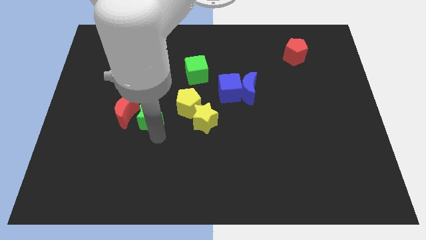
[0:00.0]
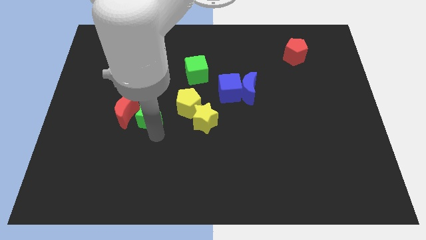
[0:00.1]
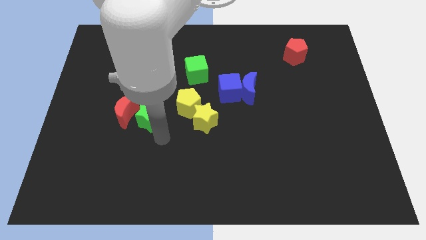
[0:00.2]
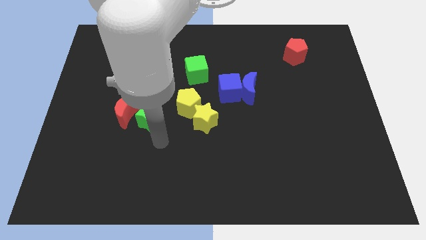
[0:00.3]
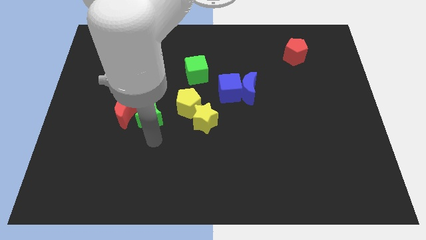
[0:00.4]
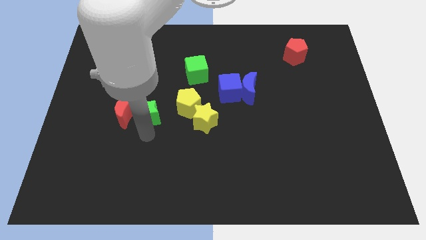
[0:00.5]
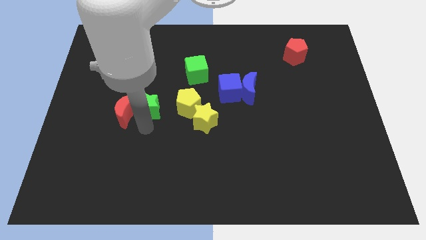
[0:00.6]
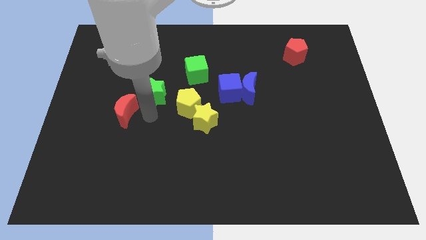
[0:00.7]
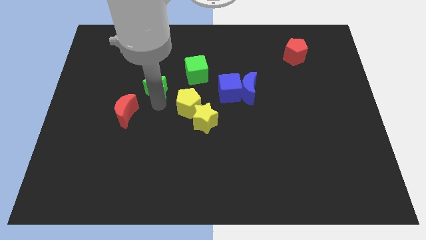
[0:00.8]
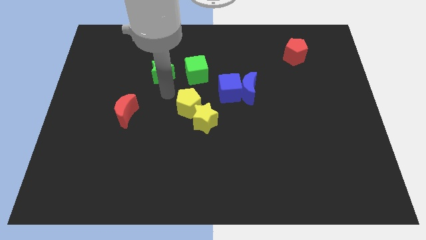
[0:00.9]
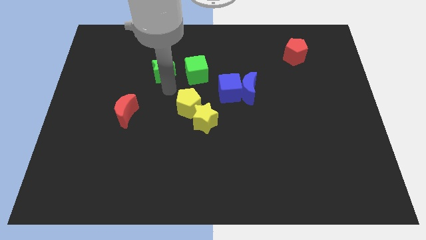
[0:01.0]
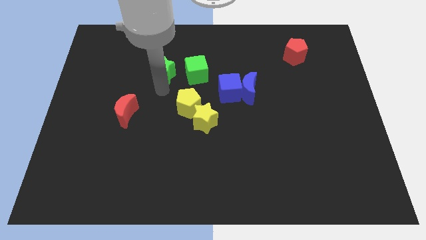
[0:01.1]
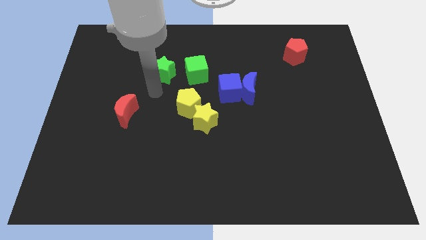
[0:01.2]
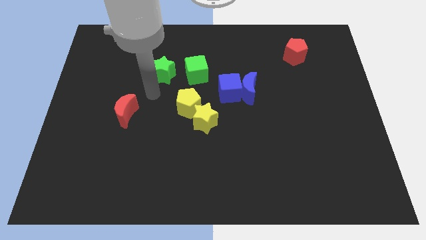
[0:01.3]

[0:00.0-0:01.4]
push the green star left to the green cube

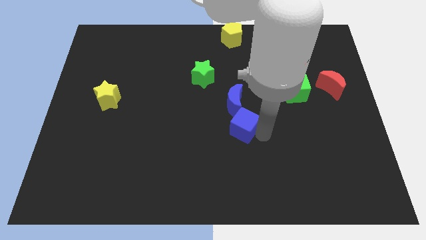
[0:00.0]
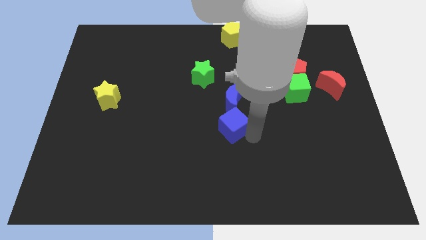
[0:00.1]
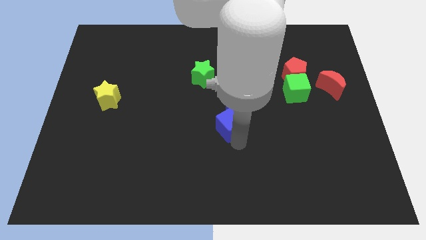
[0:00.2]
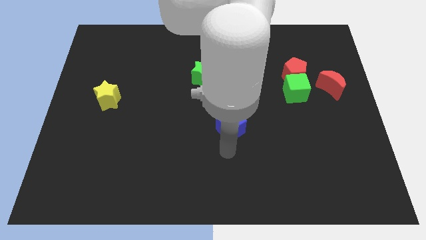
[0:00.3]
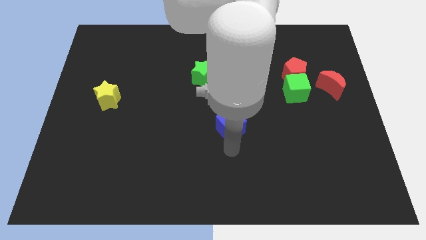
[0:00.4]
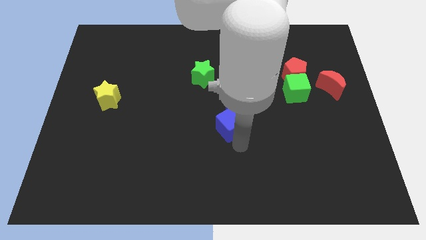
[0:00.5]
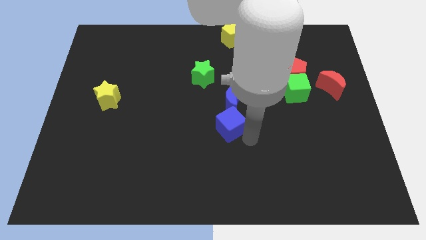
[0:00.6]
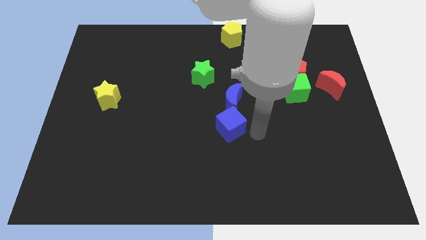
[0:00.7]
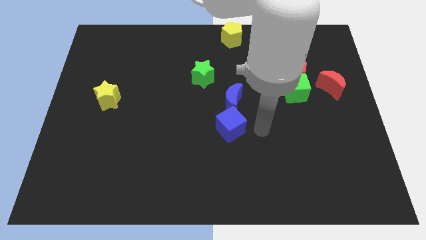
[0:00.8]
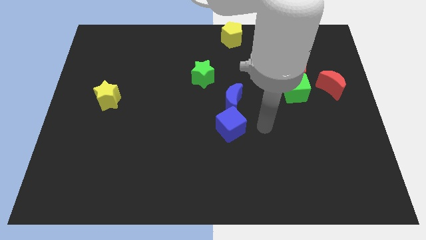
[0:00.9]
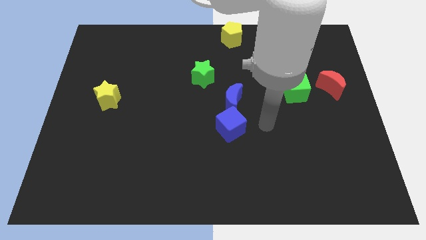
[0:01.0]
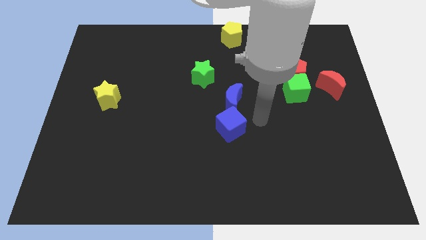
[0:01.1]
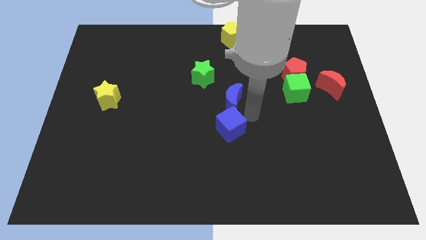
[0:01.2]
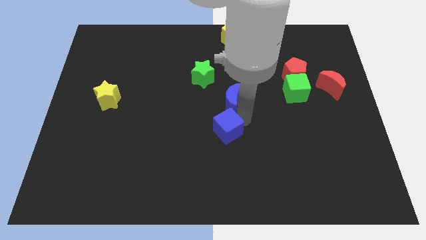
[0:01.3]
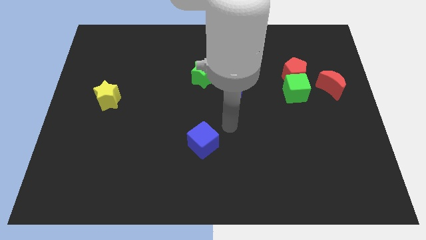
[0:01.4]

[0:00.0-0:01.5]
put the blue cube vertically below the green star

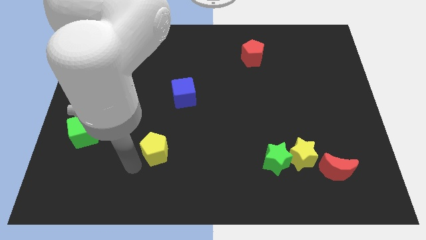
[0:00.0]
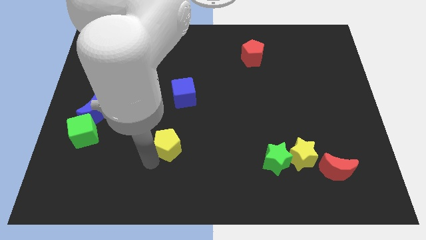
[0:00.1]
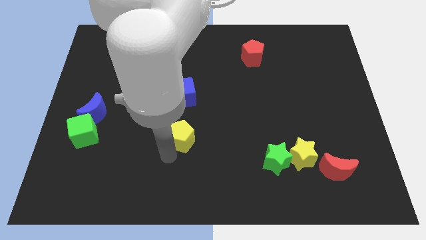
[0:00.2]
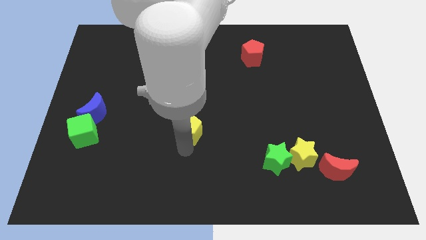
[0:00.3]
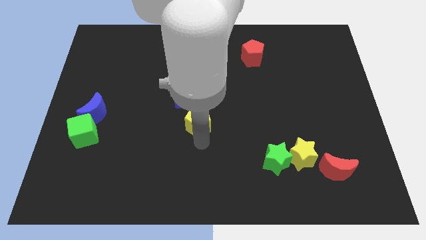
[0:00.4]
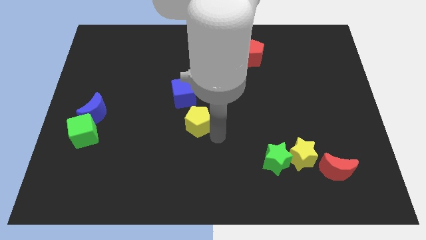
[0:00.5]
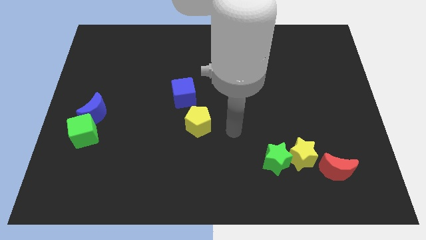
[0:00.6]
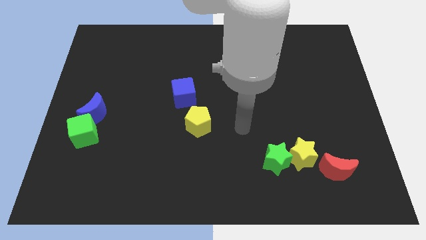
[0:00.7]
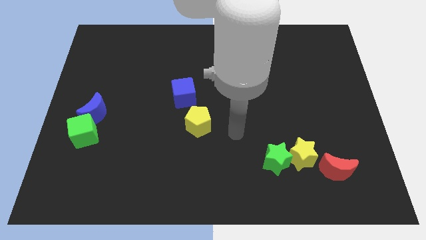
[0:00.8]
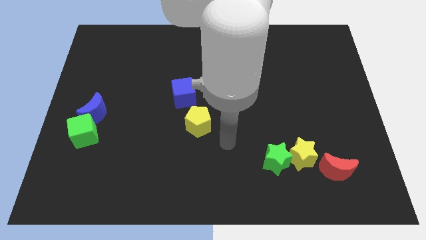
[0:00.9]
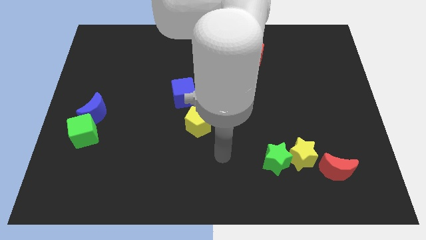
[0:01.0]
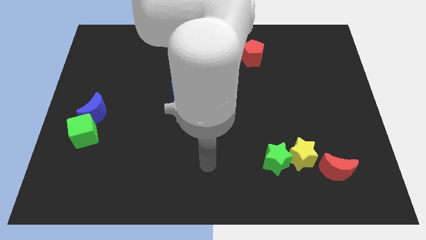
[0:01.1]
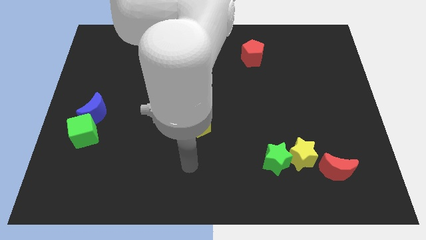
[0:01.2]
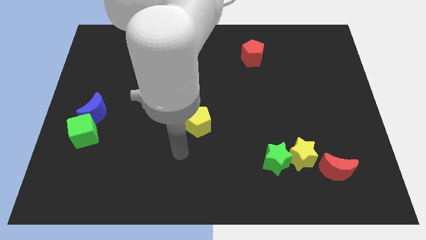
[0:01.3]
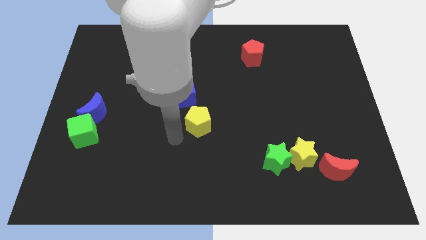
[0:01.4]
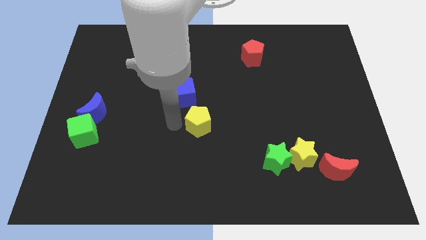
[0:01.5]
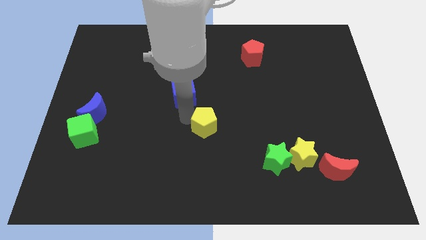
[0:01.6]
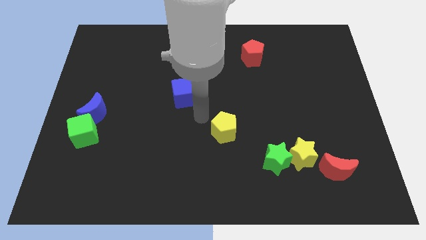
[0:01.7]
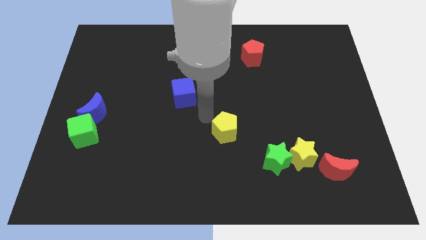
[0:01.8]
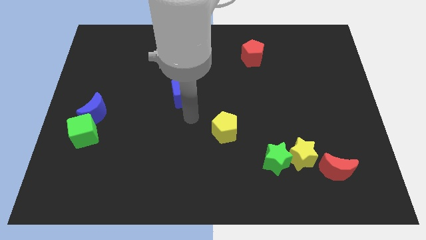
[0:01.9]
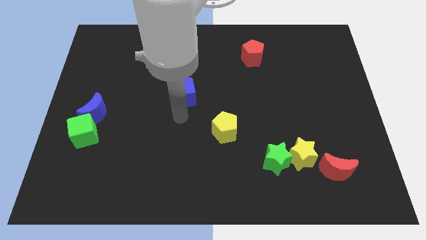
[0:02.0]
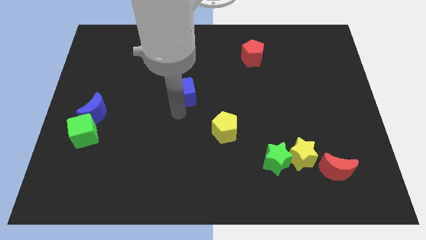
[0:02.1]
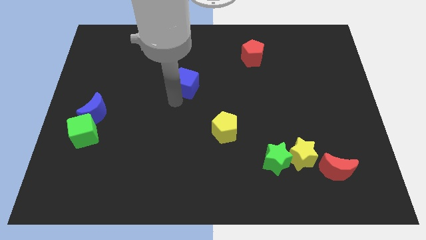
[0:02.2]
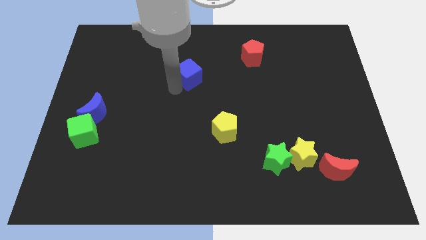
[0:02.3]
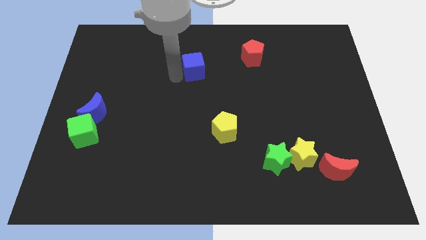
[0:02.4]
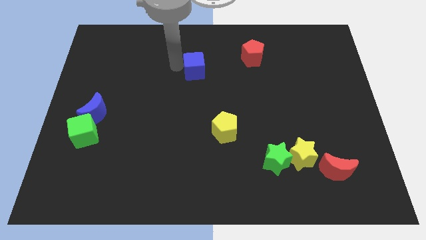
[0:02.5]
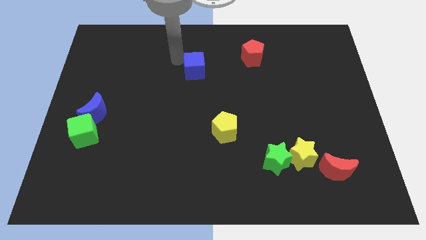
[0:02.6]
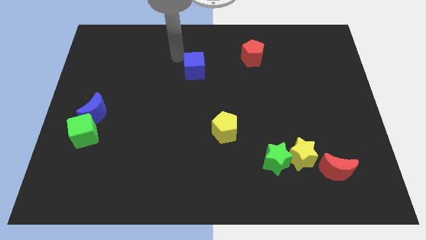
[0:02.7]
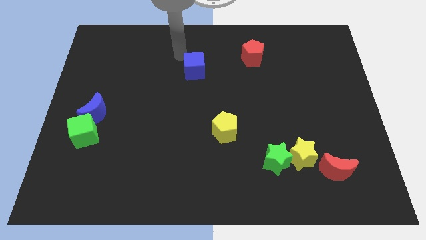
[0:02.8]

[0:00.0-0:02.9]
move the blue cube from yellow pentagon

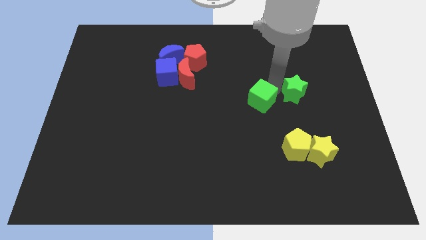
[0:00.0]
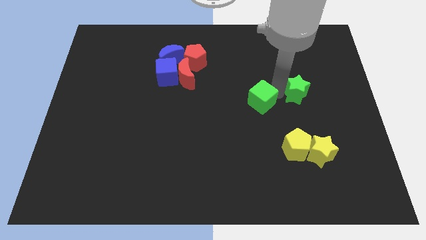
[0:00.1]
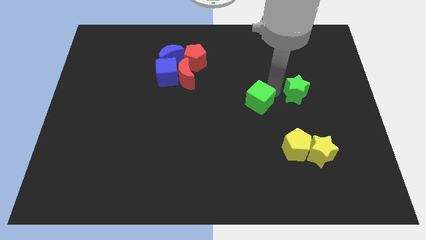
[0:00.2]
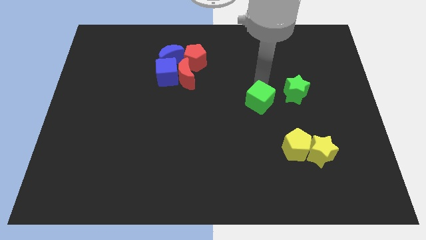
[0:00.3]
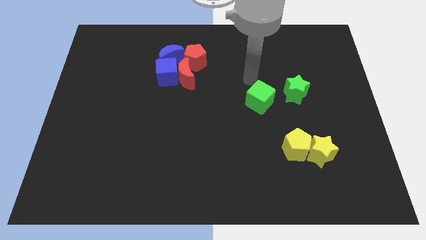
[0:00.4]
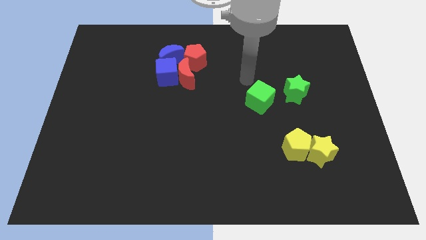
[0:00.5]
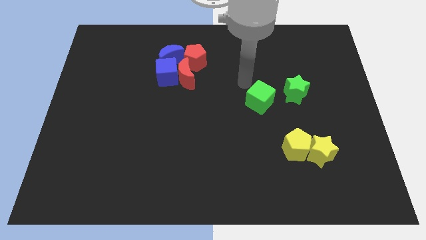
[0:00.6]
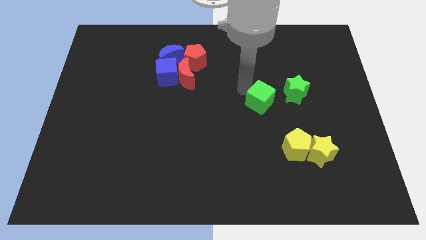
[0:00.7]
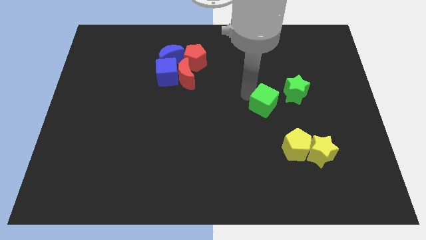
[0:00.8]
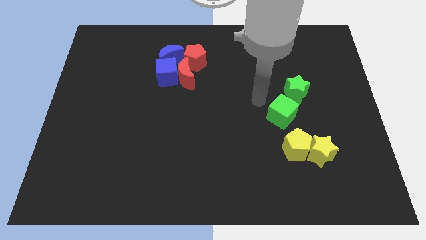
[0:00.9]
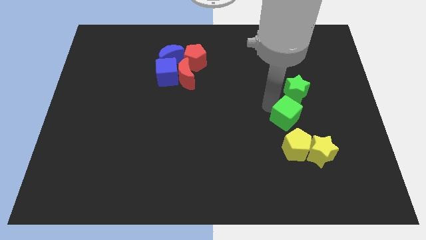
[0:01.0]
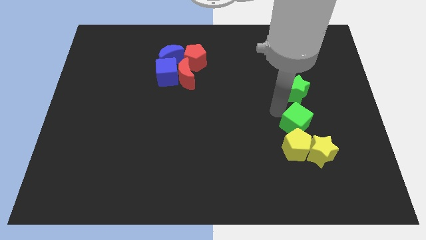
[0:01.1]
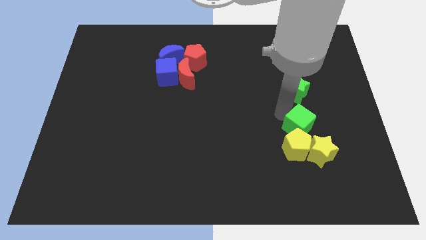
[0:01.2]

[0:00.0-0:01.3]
place the green cube below the green star

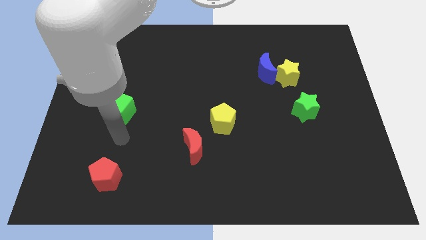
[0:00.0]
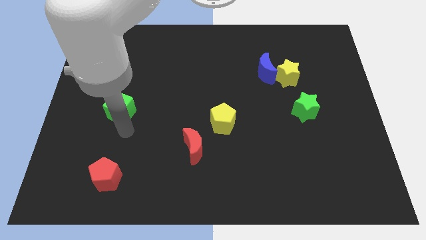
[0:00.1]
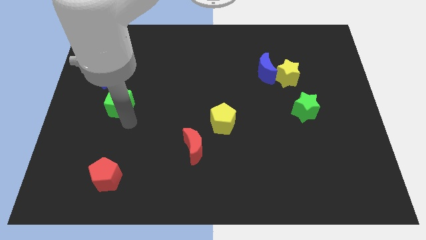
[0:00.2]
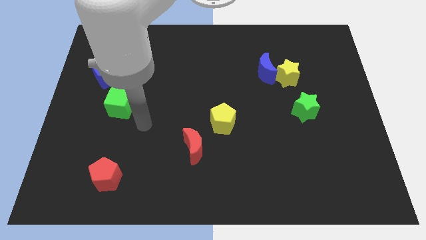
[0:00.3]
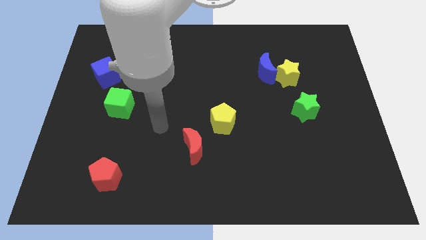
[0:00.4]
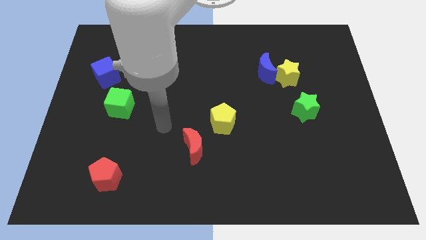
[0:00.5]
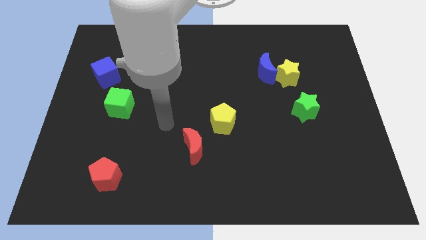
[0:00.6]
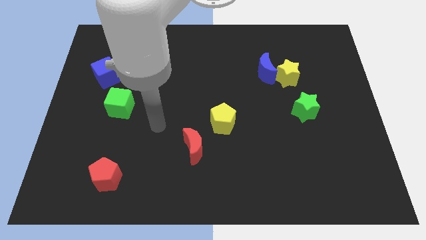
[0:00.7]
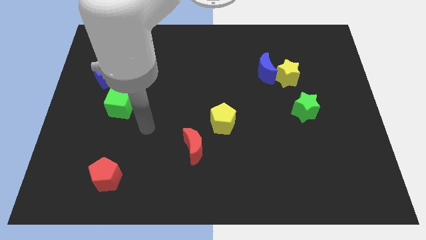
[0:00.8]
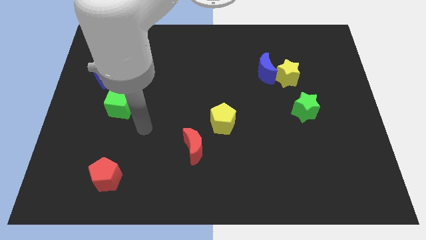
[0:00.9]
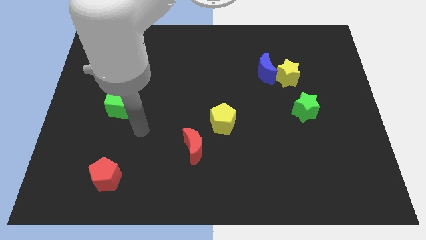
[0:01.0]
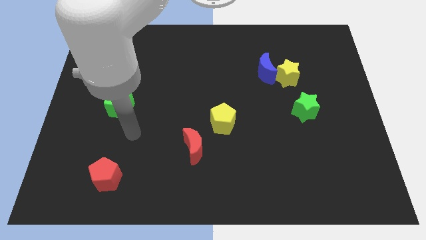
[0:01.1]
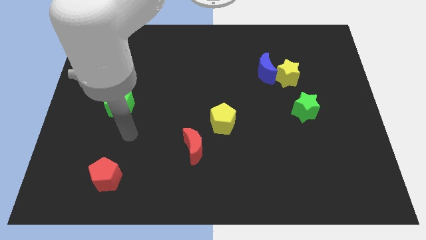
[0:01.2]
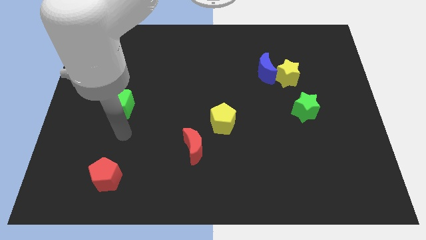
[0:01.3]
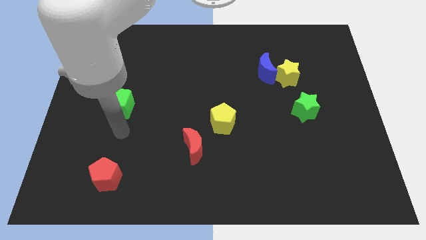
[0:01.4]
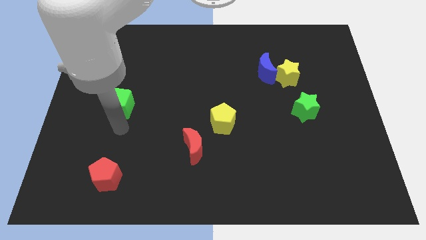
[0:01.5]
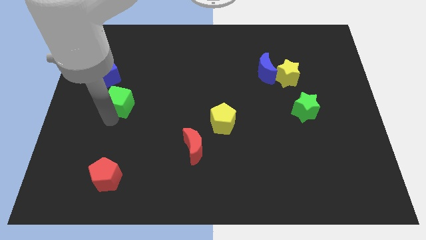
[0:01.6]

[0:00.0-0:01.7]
move your arm to the bottom of green cube

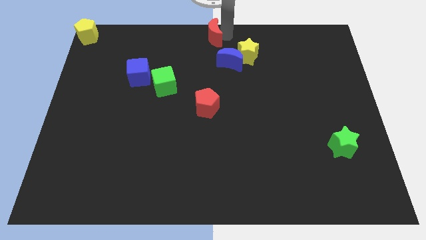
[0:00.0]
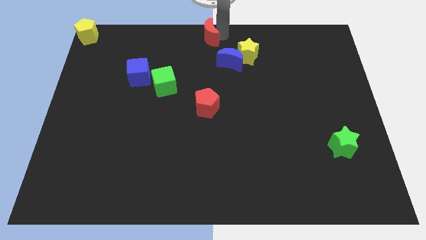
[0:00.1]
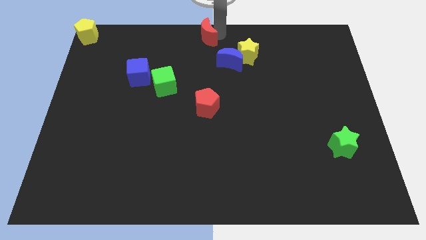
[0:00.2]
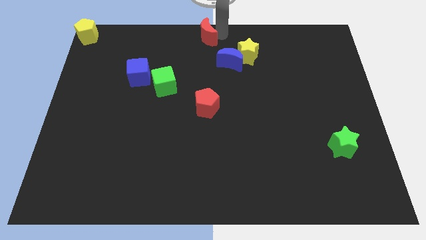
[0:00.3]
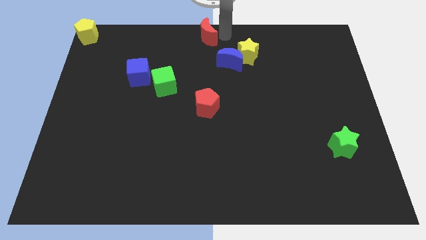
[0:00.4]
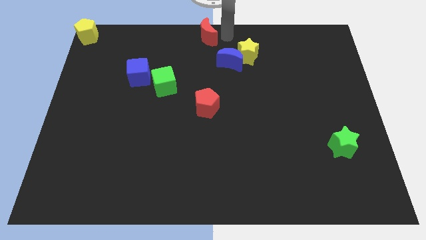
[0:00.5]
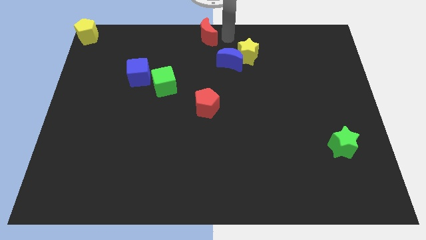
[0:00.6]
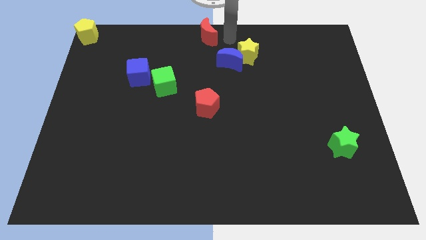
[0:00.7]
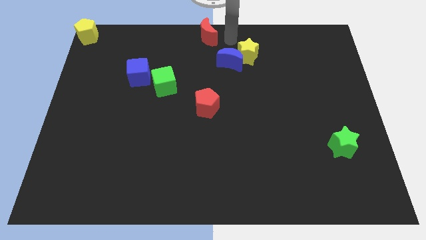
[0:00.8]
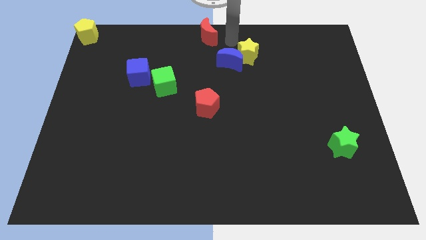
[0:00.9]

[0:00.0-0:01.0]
slide the red crescent in parallel to the yellow pentagon